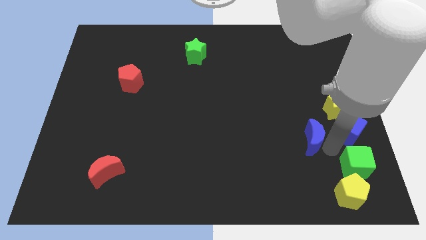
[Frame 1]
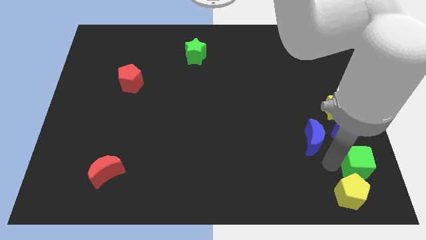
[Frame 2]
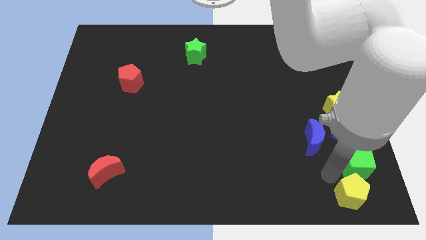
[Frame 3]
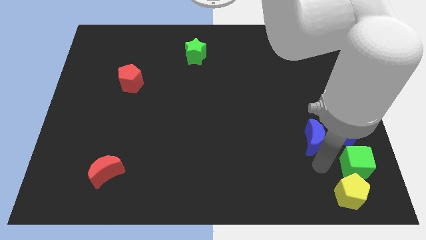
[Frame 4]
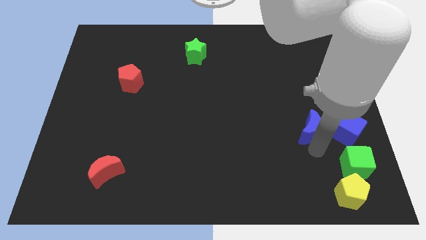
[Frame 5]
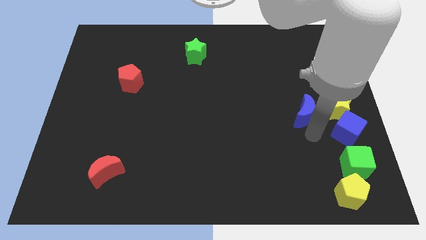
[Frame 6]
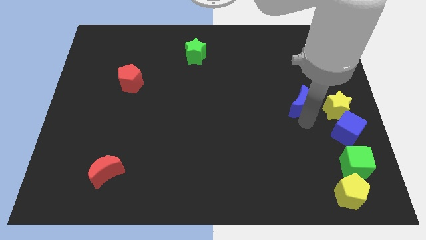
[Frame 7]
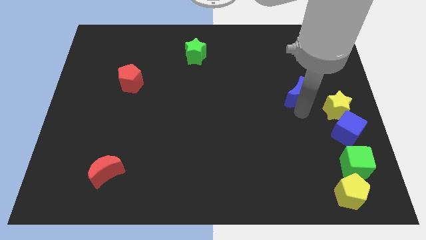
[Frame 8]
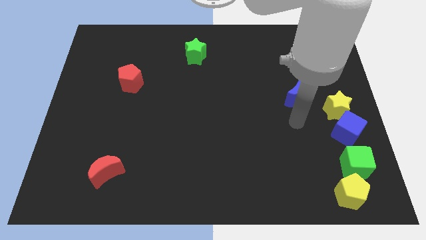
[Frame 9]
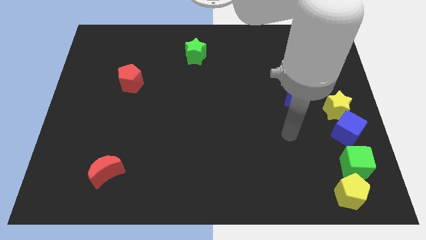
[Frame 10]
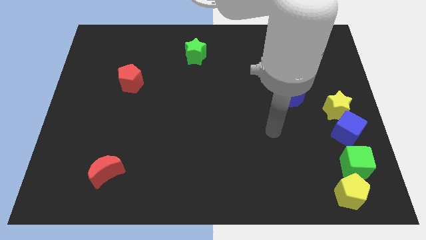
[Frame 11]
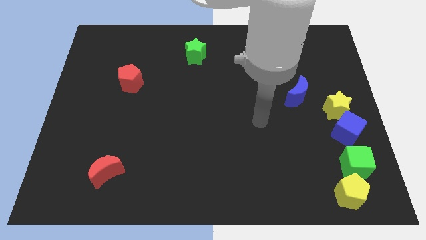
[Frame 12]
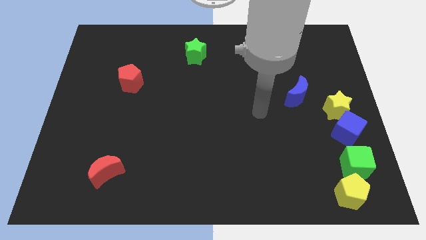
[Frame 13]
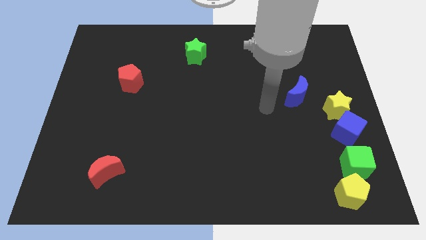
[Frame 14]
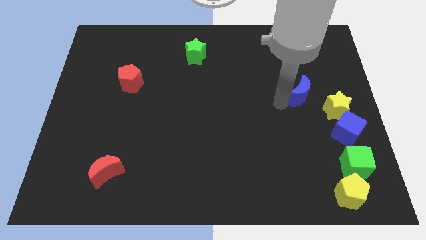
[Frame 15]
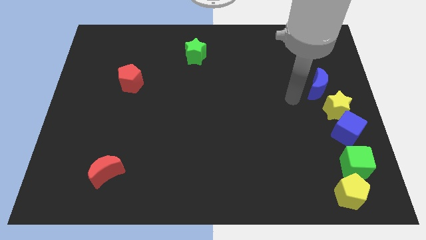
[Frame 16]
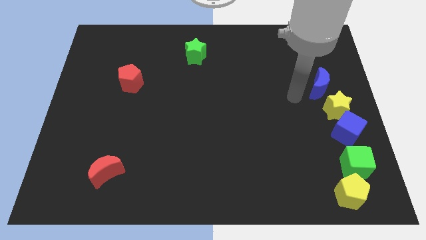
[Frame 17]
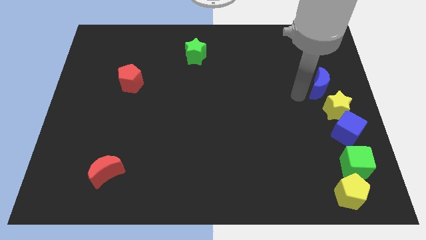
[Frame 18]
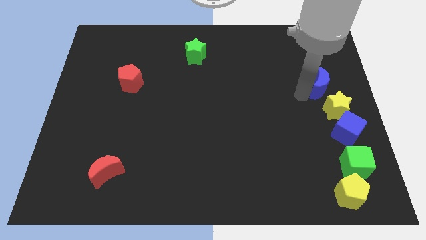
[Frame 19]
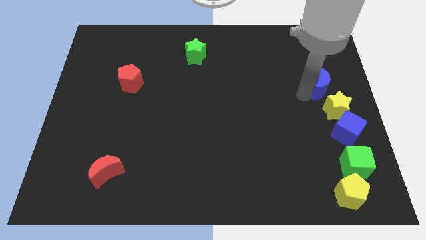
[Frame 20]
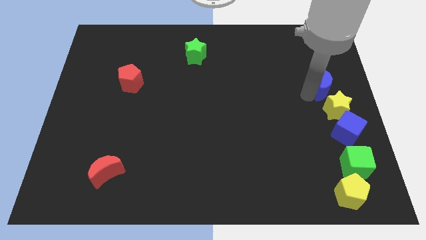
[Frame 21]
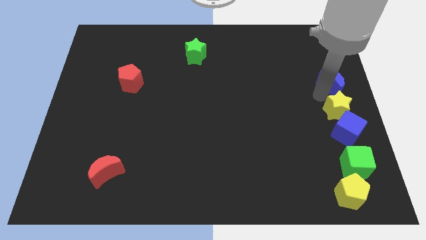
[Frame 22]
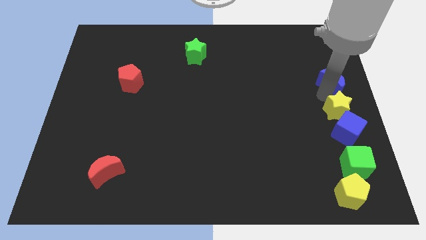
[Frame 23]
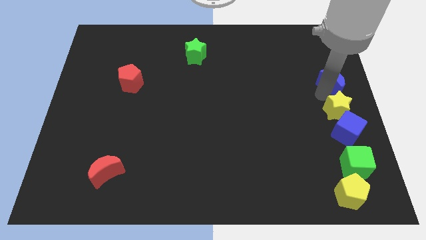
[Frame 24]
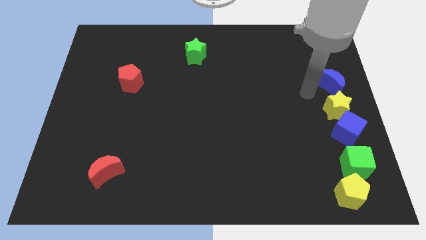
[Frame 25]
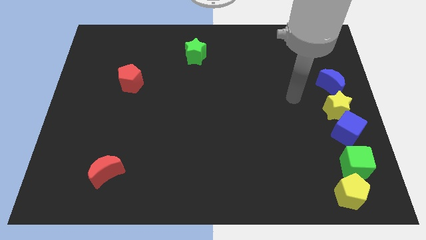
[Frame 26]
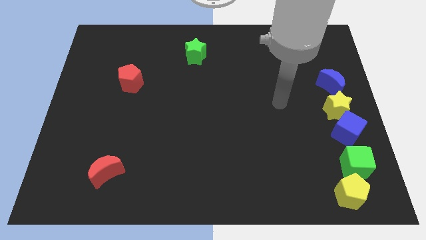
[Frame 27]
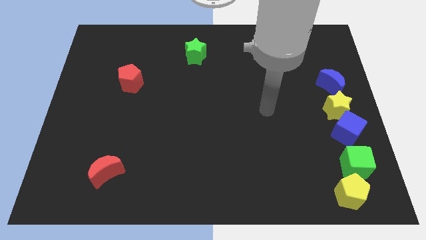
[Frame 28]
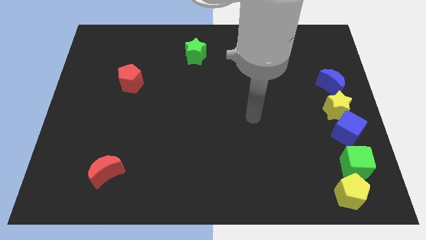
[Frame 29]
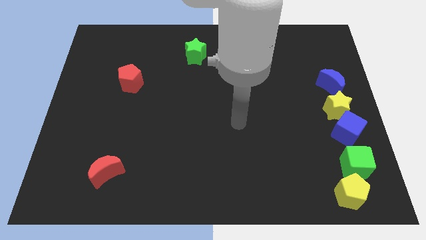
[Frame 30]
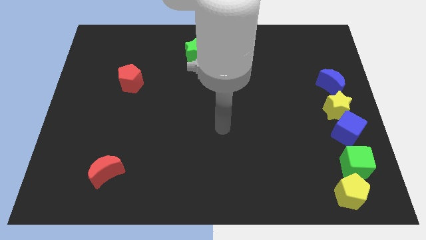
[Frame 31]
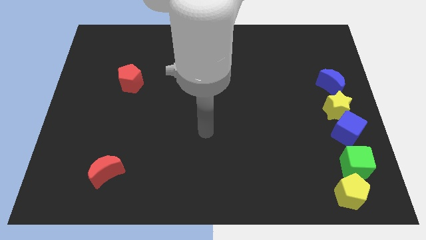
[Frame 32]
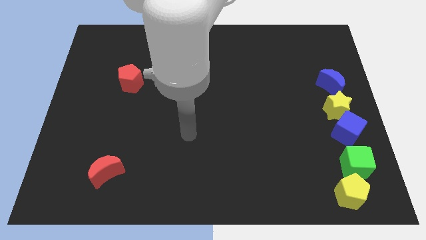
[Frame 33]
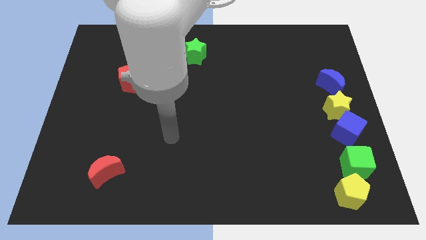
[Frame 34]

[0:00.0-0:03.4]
place the blue moon at the top of yellow star

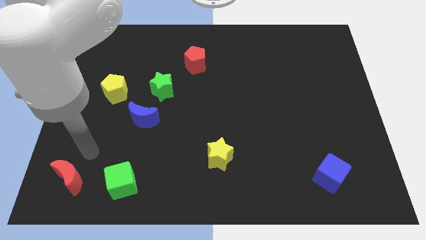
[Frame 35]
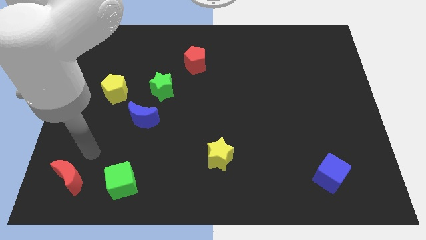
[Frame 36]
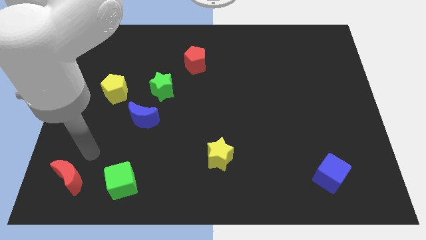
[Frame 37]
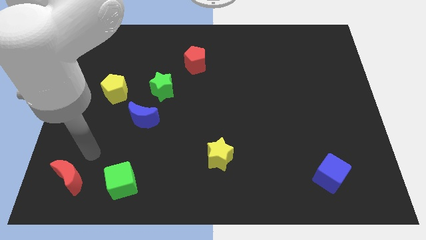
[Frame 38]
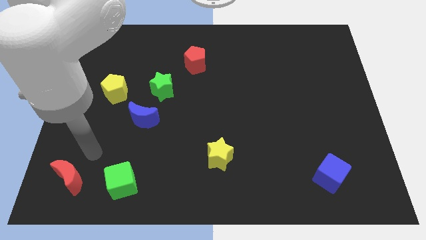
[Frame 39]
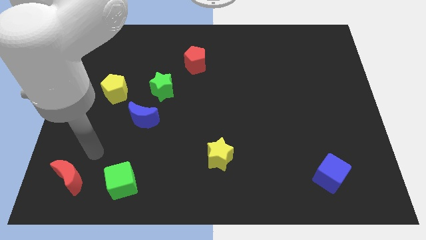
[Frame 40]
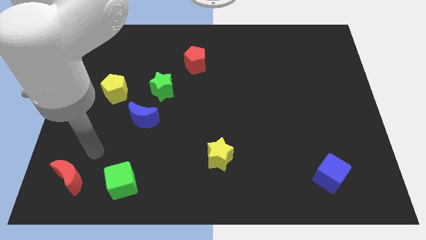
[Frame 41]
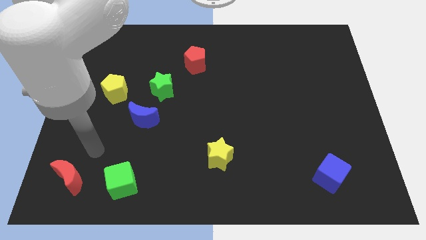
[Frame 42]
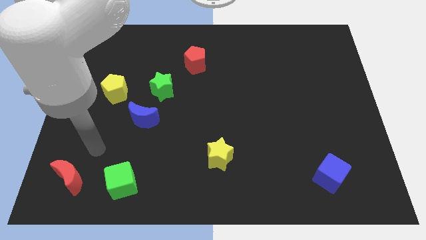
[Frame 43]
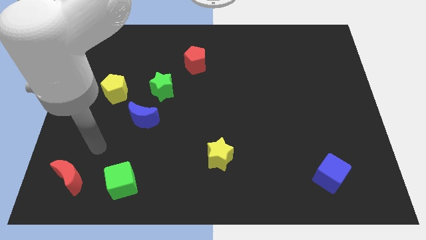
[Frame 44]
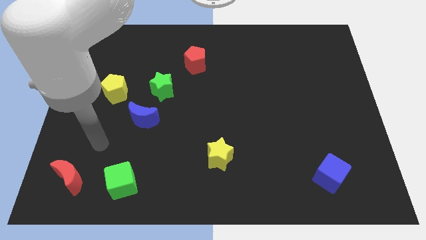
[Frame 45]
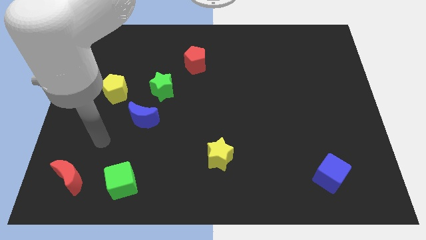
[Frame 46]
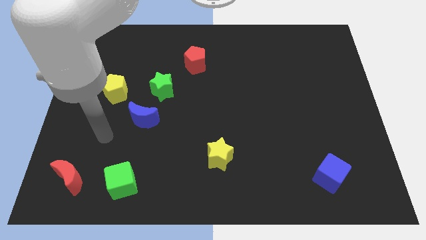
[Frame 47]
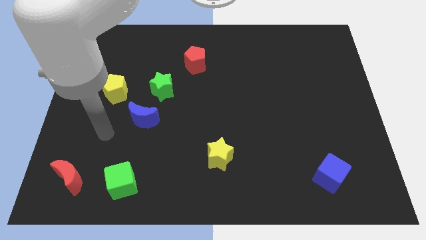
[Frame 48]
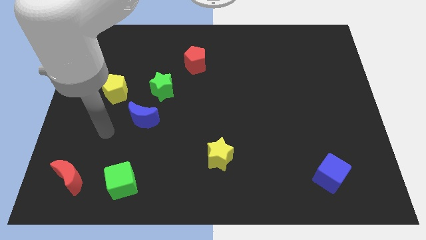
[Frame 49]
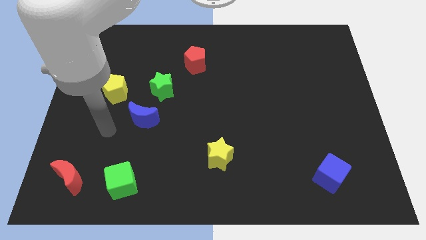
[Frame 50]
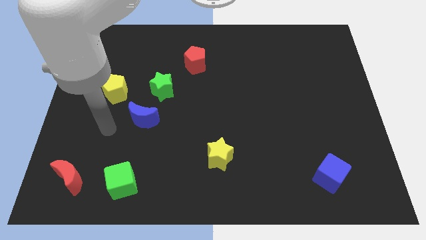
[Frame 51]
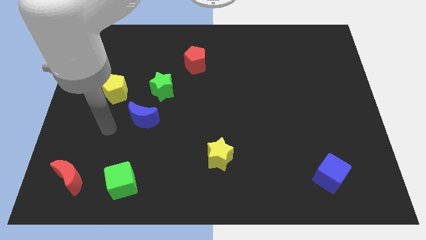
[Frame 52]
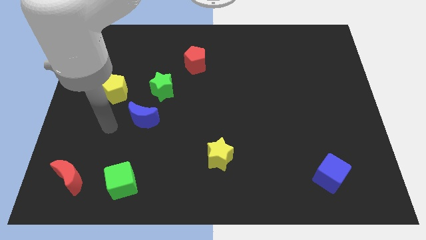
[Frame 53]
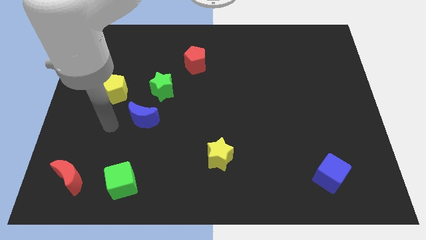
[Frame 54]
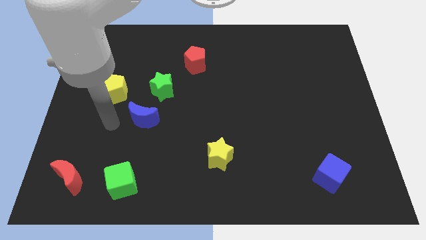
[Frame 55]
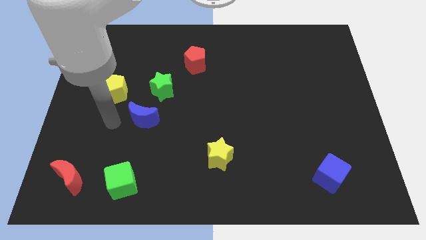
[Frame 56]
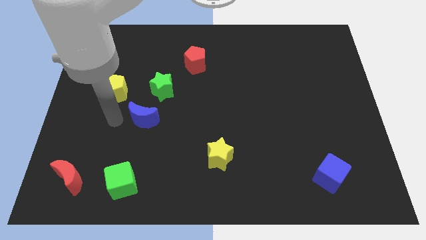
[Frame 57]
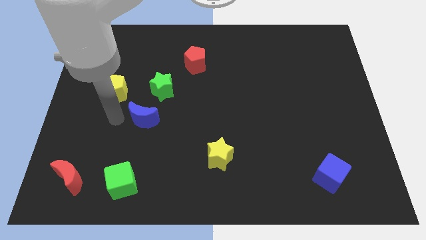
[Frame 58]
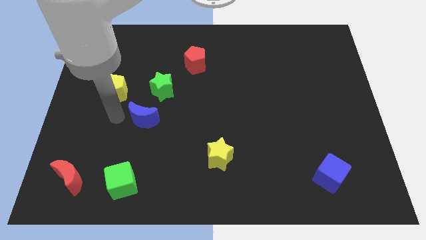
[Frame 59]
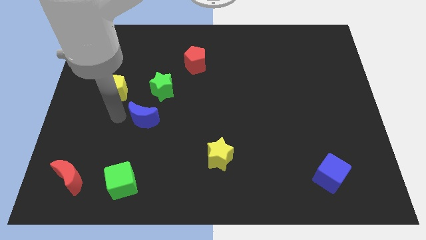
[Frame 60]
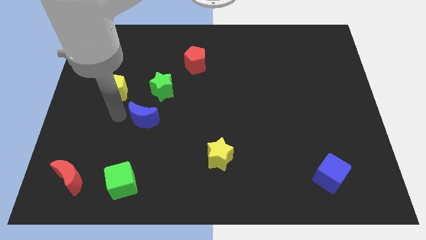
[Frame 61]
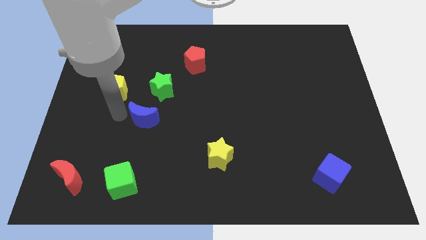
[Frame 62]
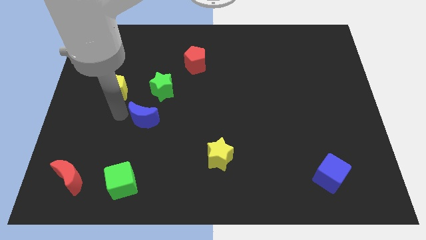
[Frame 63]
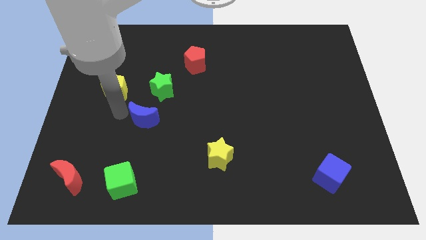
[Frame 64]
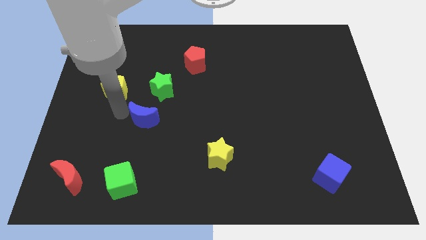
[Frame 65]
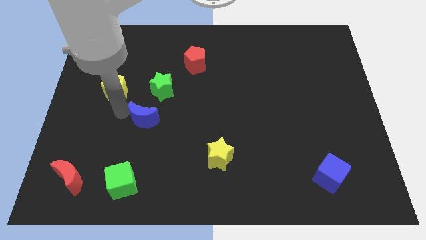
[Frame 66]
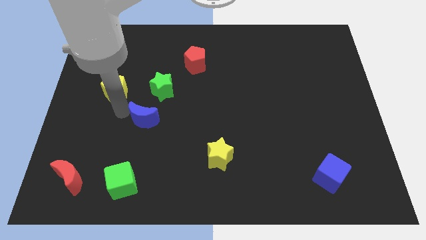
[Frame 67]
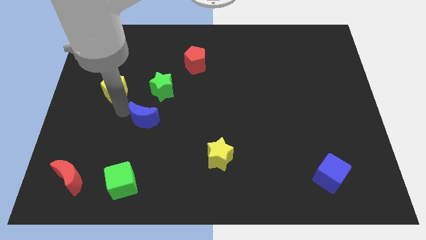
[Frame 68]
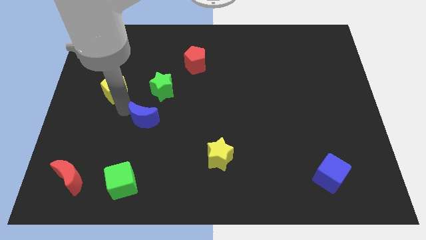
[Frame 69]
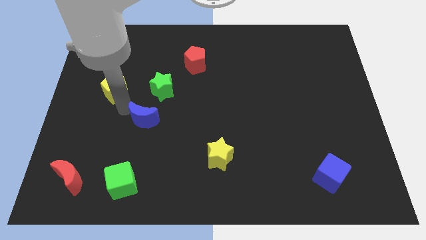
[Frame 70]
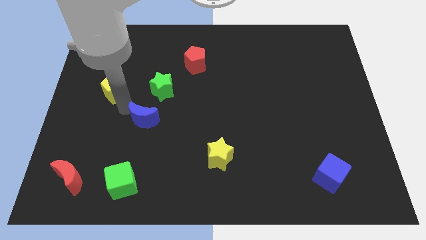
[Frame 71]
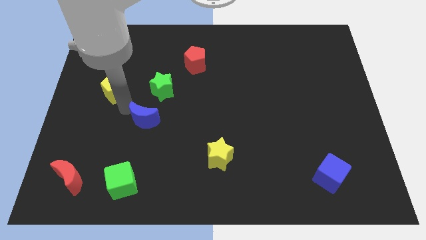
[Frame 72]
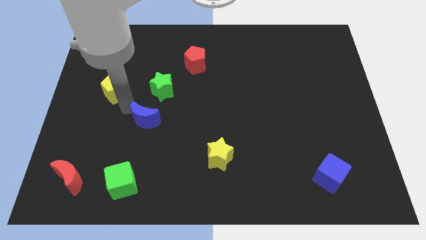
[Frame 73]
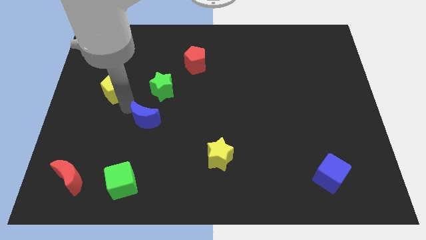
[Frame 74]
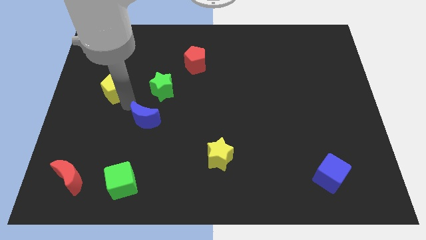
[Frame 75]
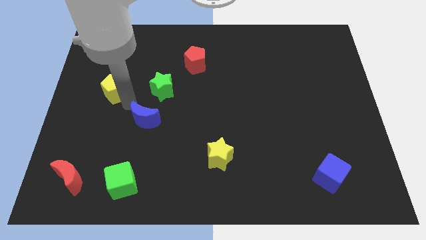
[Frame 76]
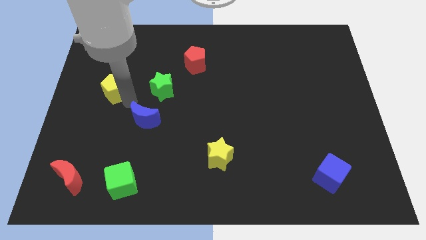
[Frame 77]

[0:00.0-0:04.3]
place your arm in between yellow pentagon and blue moon

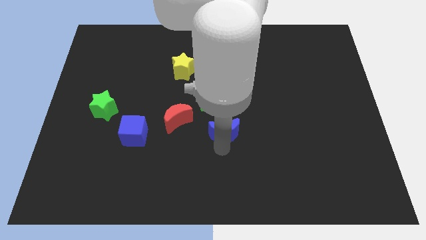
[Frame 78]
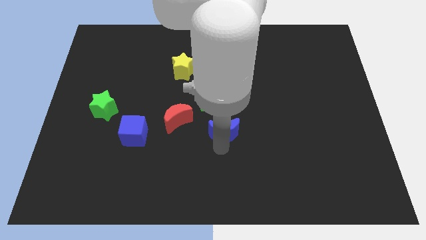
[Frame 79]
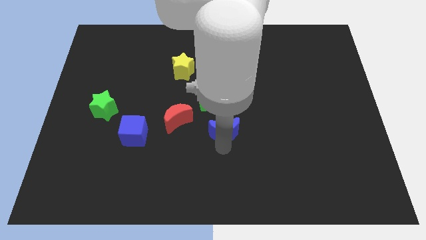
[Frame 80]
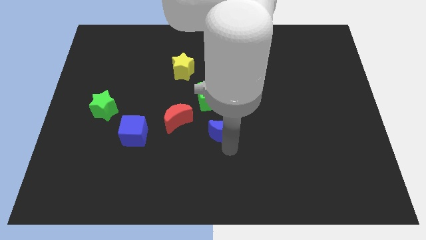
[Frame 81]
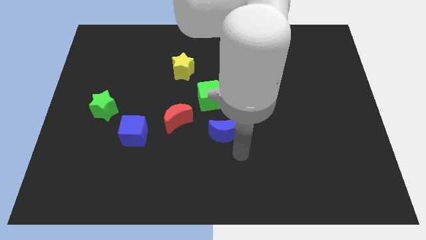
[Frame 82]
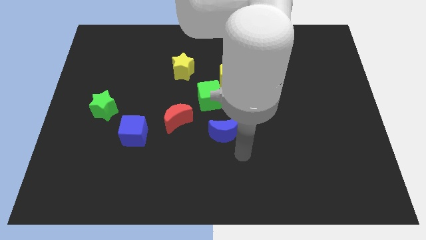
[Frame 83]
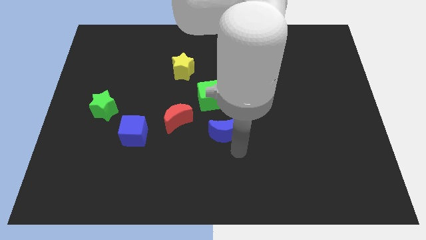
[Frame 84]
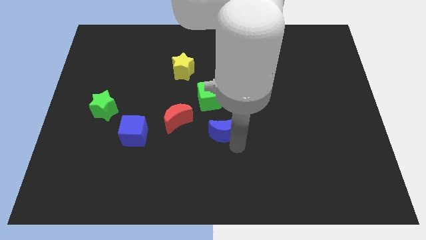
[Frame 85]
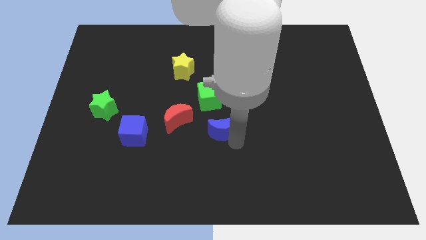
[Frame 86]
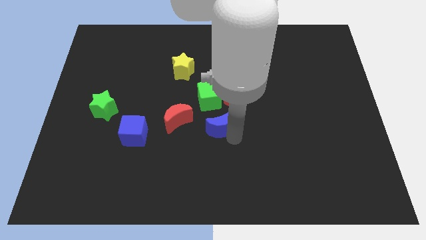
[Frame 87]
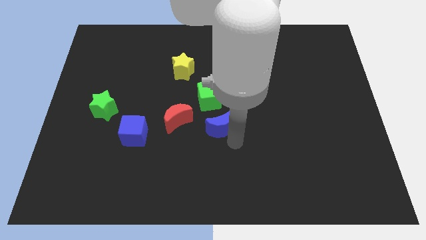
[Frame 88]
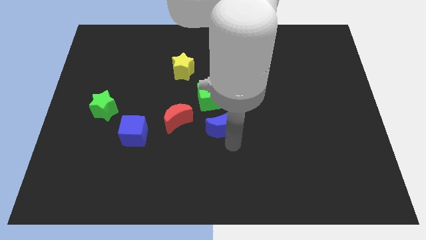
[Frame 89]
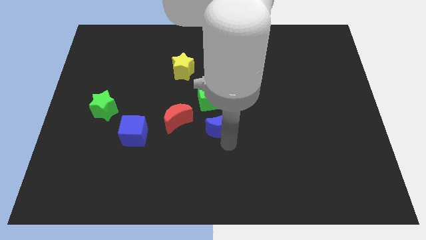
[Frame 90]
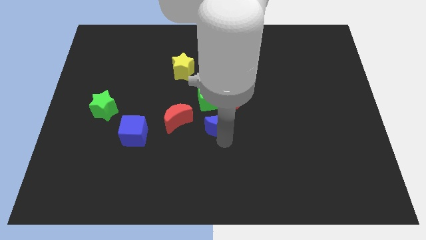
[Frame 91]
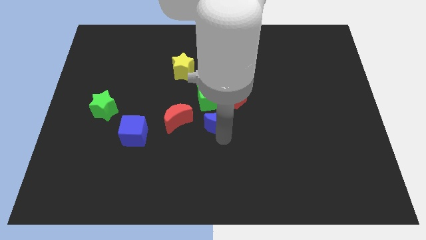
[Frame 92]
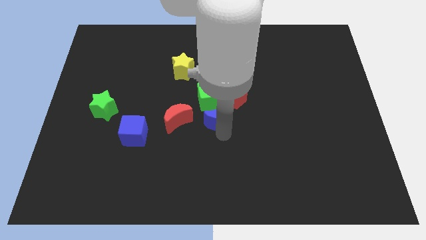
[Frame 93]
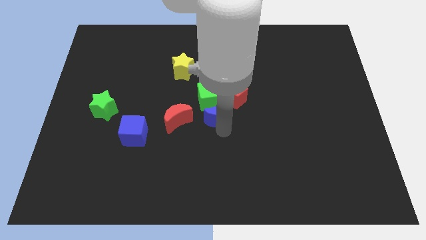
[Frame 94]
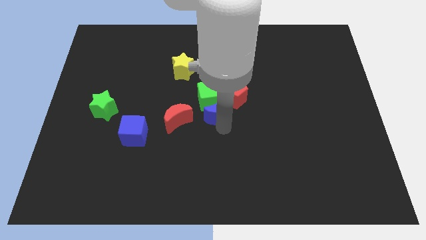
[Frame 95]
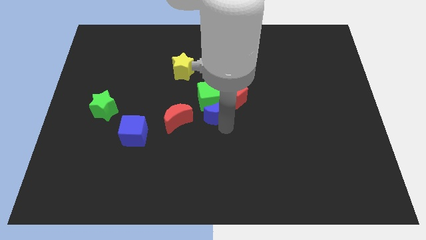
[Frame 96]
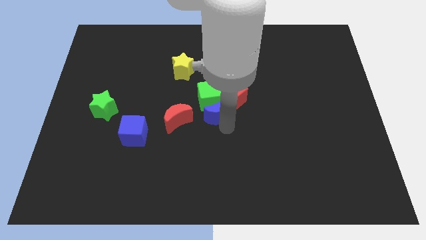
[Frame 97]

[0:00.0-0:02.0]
move the blue crescent to the bottom of the green cube
